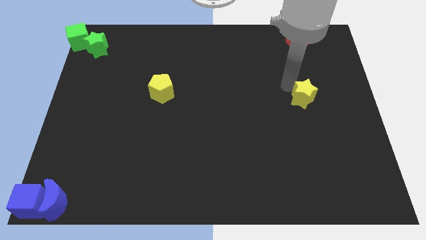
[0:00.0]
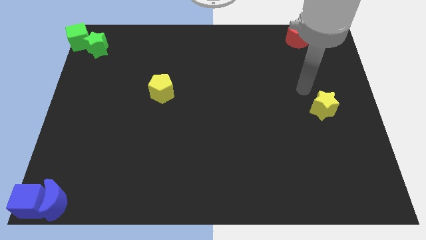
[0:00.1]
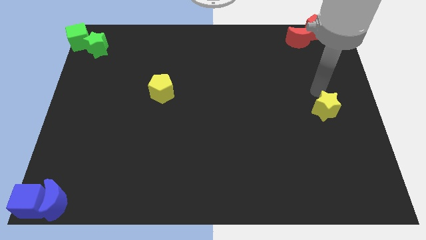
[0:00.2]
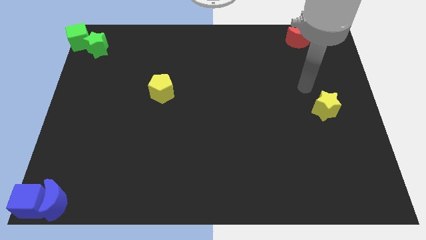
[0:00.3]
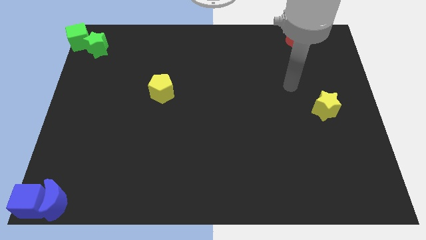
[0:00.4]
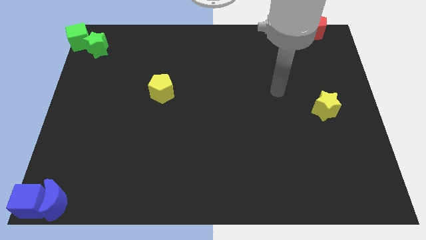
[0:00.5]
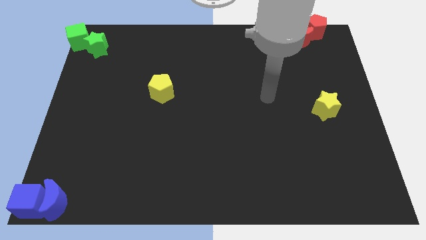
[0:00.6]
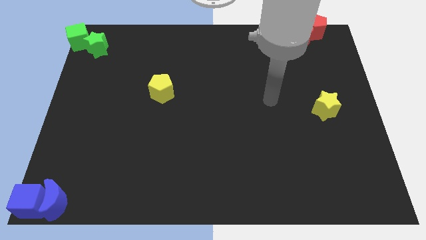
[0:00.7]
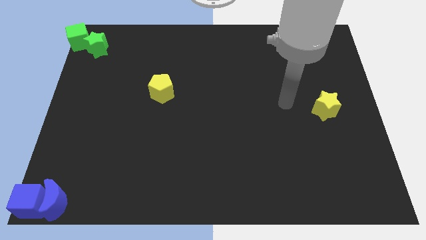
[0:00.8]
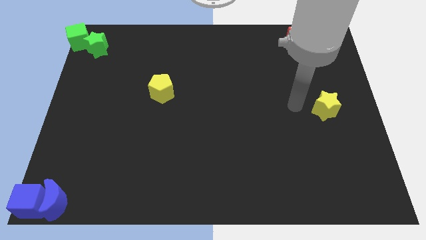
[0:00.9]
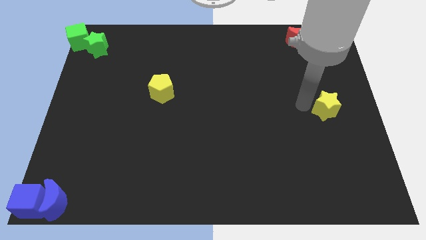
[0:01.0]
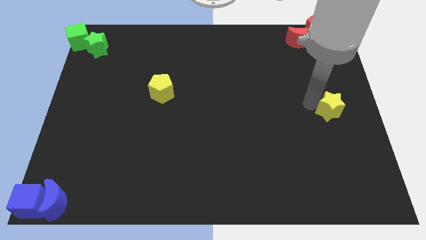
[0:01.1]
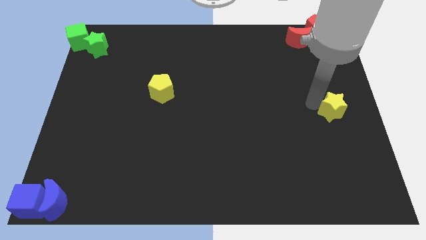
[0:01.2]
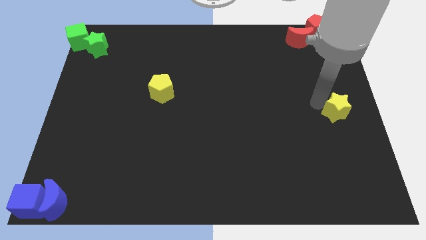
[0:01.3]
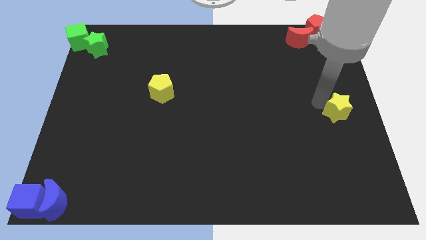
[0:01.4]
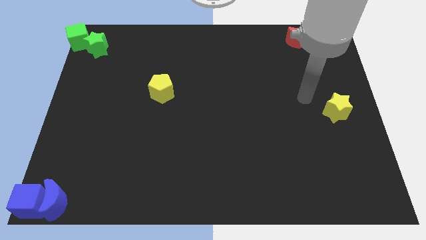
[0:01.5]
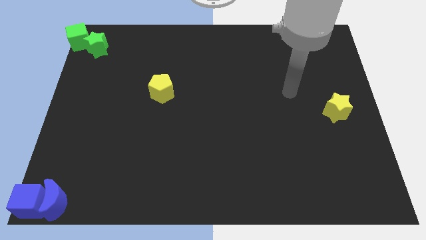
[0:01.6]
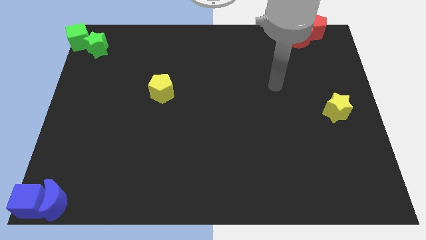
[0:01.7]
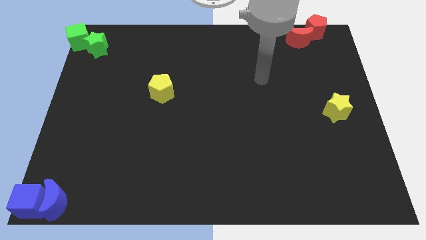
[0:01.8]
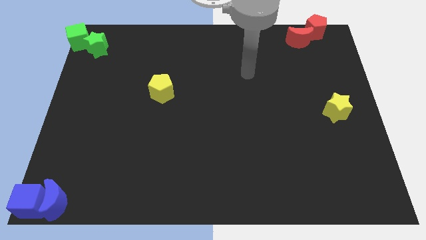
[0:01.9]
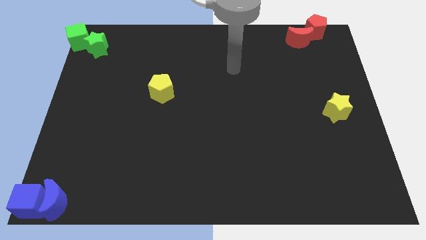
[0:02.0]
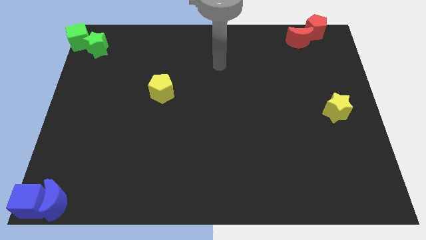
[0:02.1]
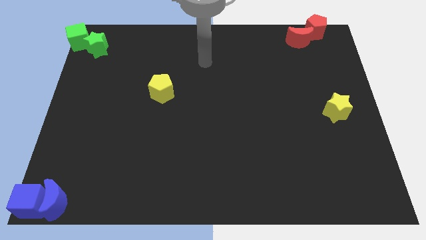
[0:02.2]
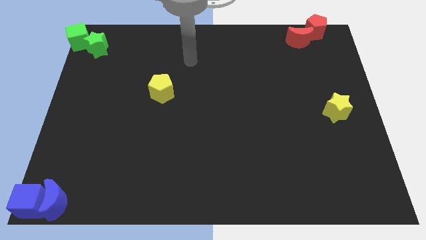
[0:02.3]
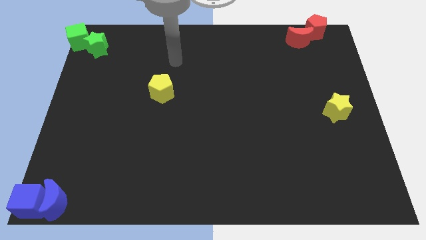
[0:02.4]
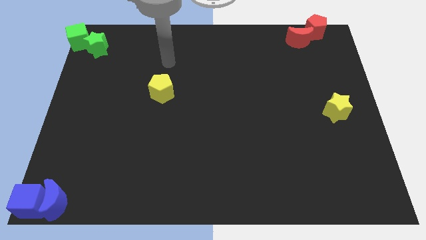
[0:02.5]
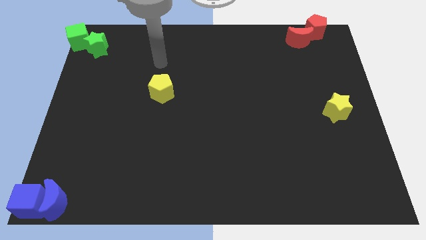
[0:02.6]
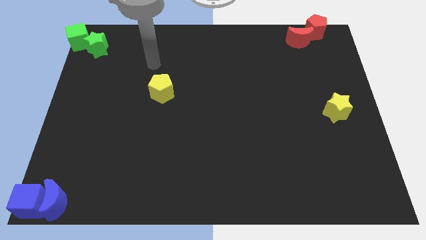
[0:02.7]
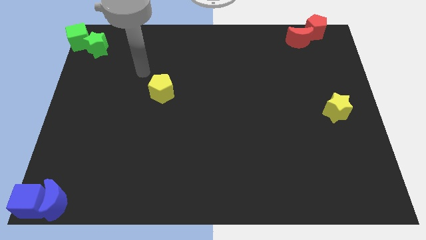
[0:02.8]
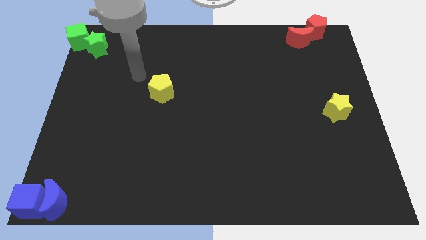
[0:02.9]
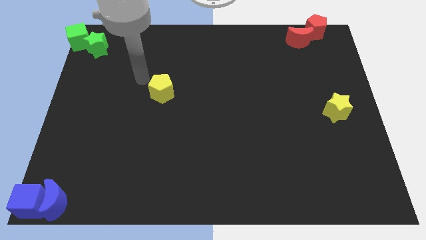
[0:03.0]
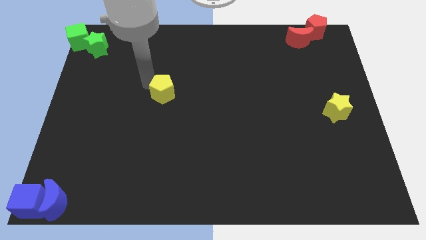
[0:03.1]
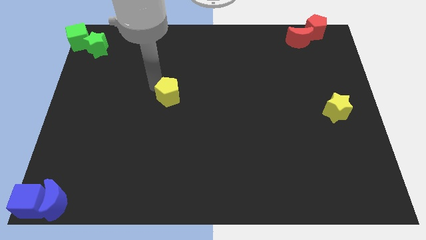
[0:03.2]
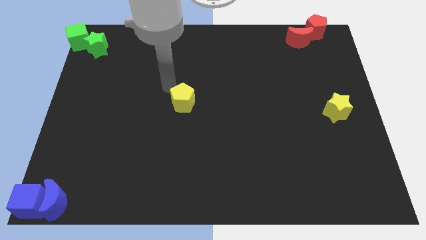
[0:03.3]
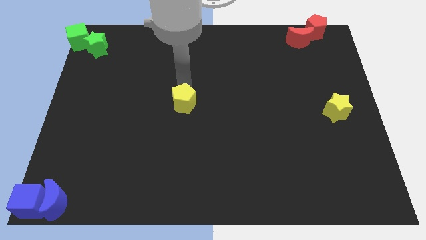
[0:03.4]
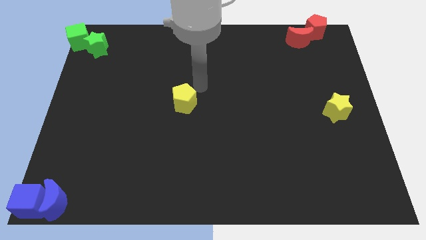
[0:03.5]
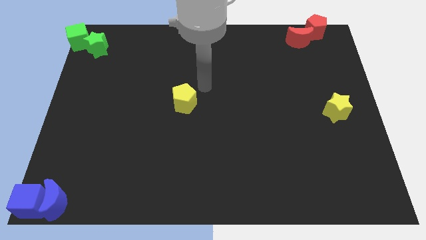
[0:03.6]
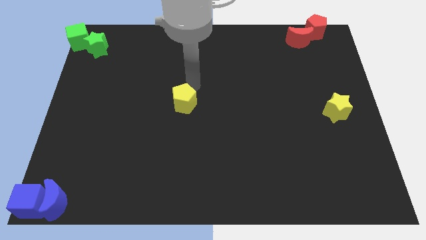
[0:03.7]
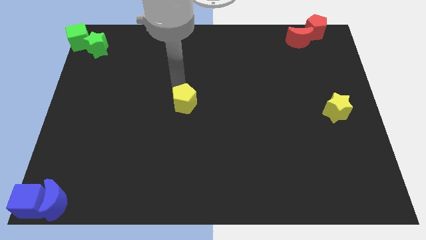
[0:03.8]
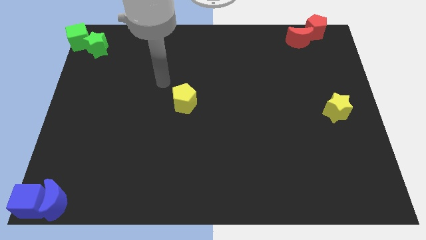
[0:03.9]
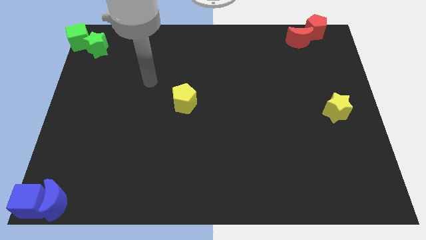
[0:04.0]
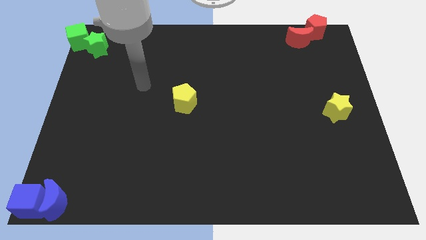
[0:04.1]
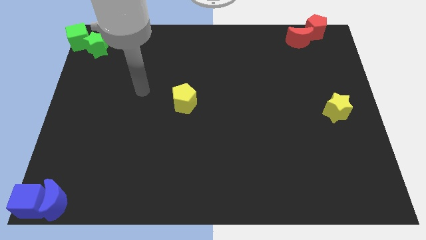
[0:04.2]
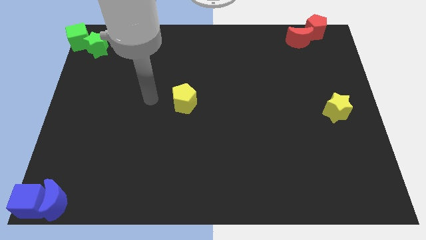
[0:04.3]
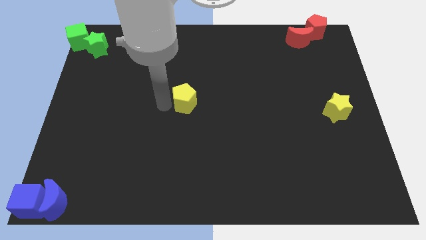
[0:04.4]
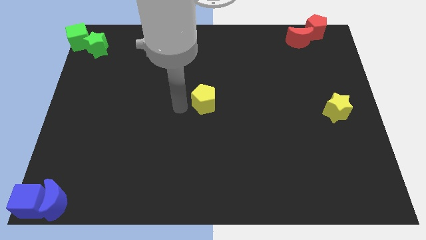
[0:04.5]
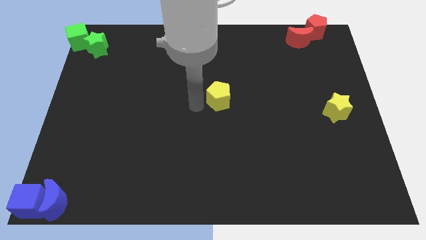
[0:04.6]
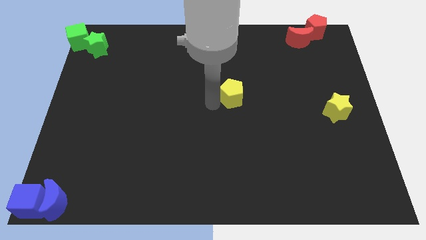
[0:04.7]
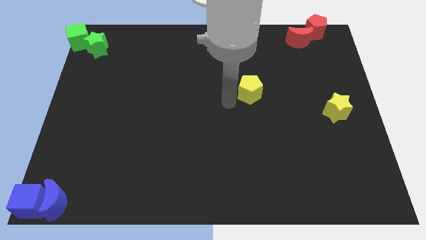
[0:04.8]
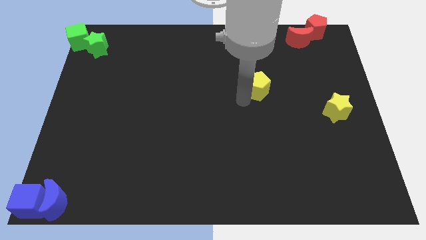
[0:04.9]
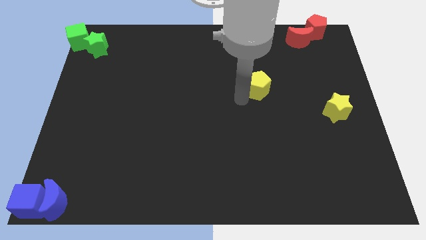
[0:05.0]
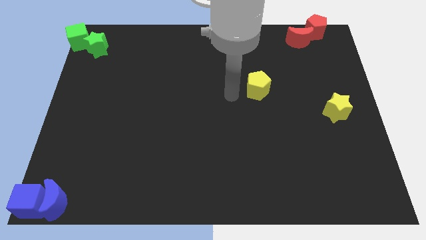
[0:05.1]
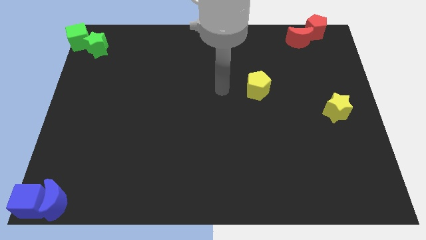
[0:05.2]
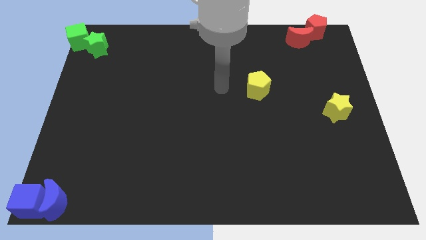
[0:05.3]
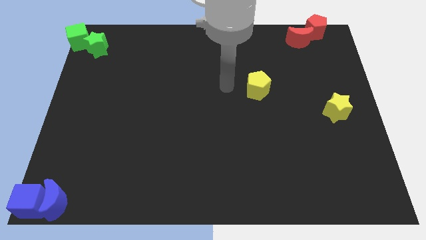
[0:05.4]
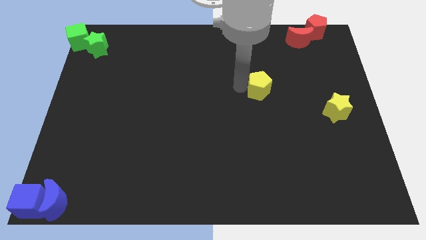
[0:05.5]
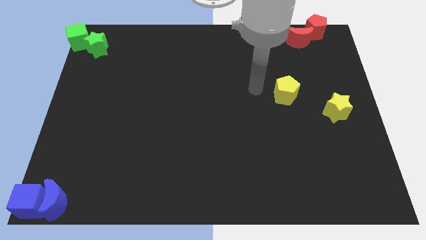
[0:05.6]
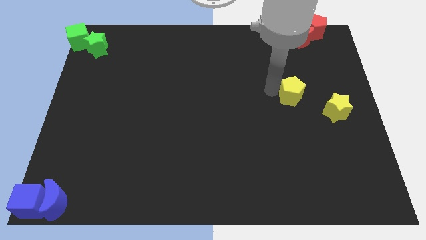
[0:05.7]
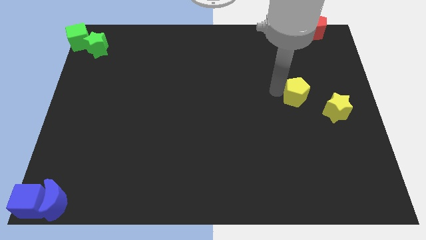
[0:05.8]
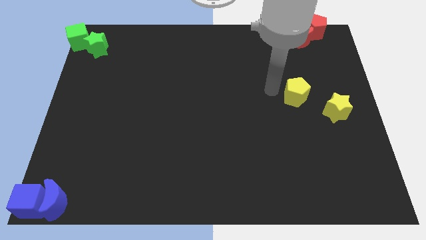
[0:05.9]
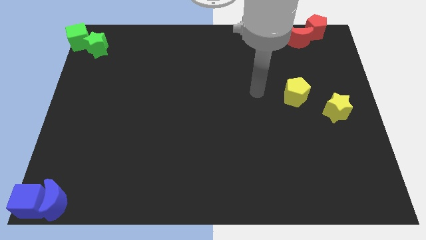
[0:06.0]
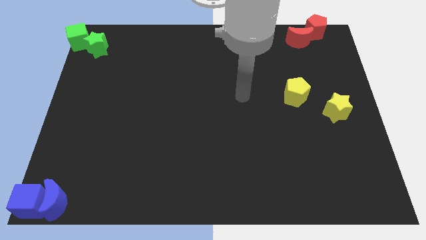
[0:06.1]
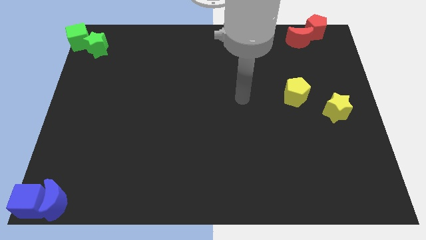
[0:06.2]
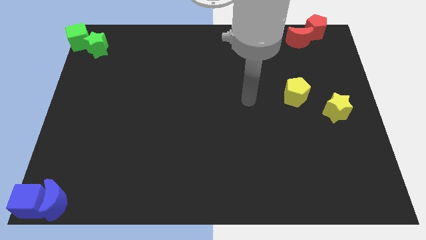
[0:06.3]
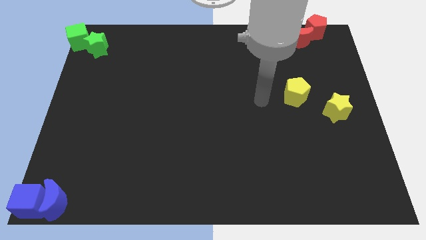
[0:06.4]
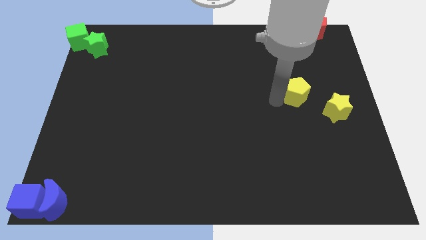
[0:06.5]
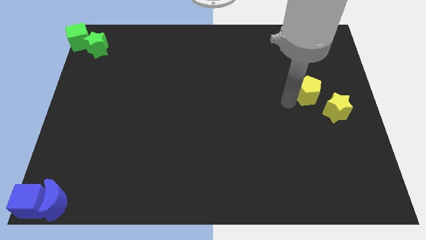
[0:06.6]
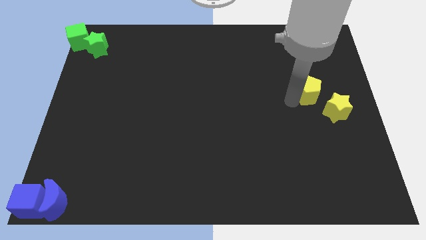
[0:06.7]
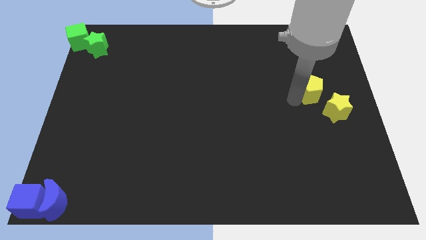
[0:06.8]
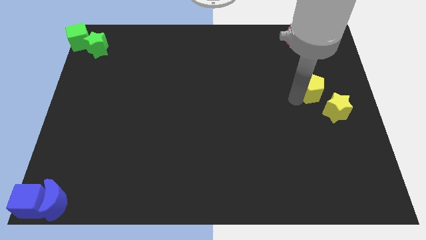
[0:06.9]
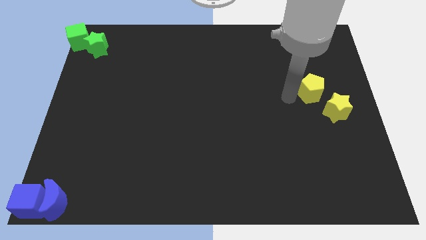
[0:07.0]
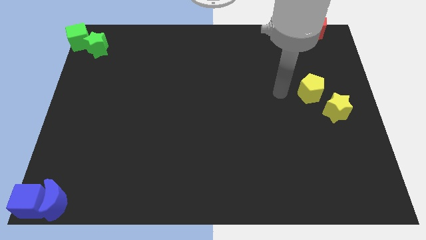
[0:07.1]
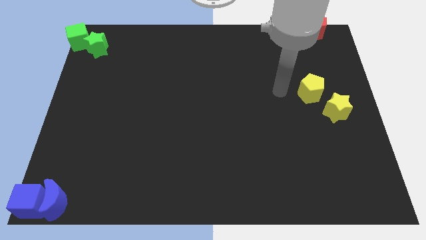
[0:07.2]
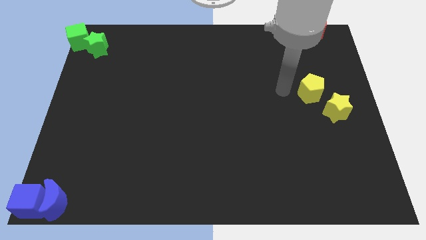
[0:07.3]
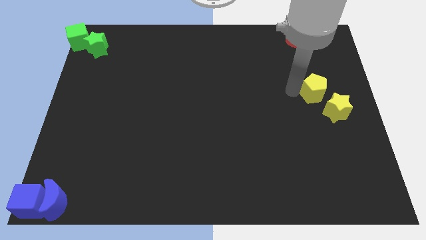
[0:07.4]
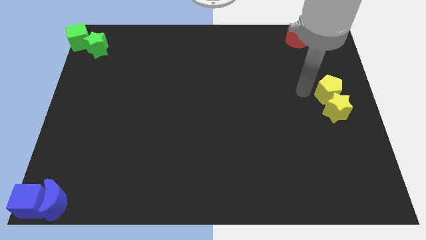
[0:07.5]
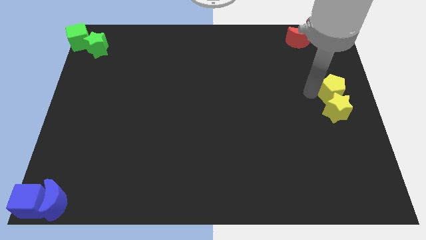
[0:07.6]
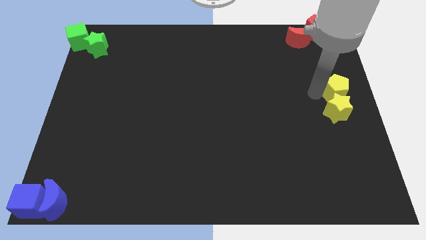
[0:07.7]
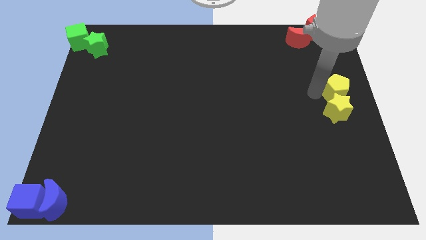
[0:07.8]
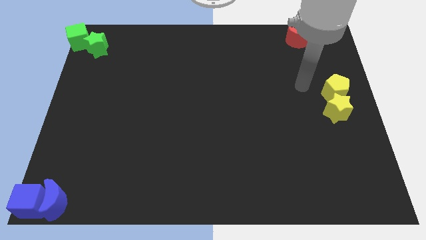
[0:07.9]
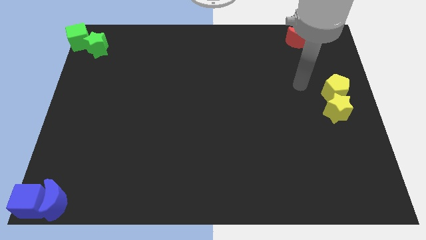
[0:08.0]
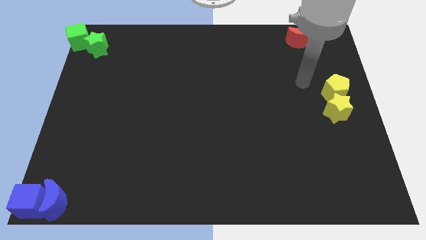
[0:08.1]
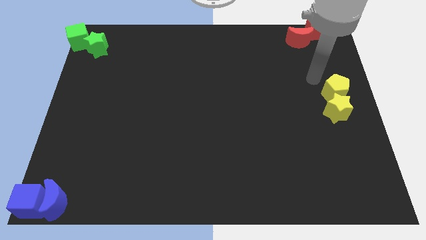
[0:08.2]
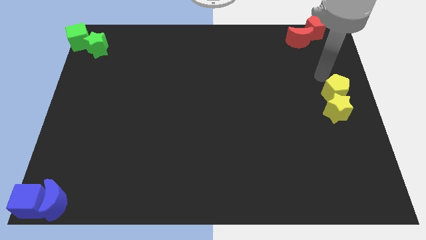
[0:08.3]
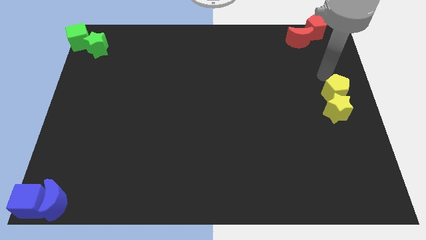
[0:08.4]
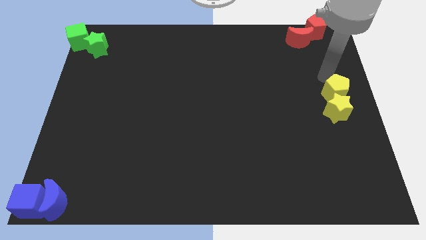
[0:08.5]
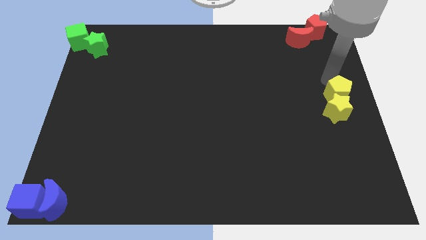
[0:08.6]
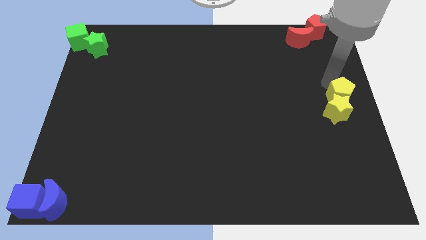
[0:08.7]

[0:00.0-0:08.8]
place the yellow pentagon above the yellow the star

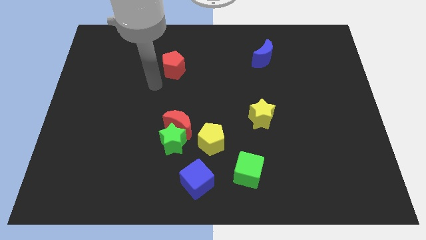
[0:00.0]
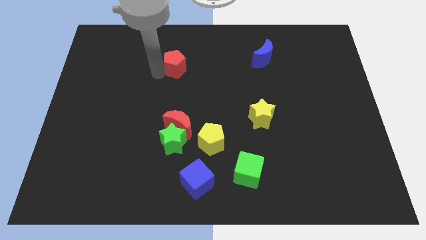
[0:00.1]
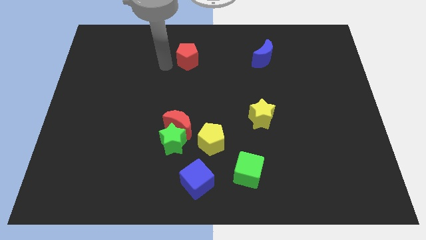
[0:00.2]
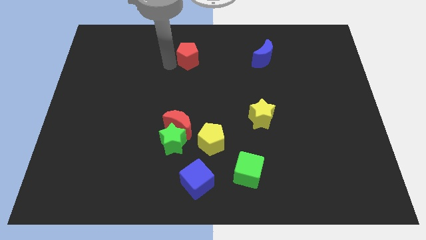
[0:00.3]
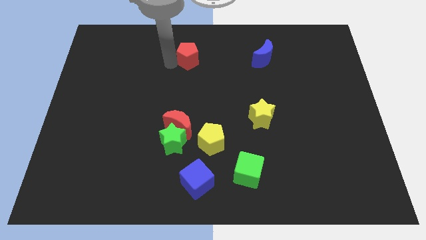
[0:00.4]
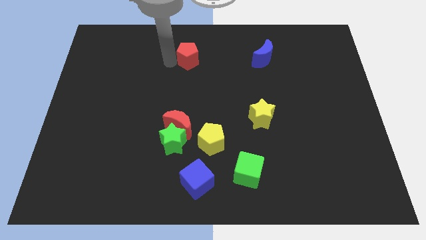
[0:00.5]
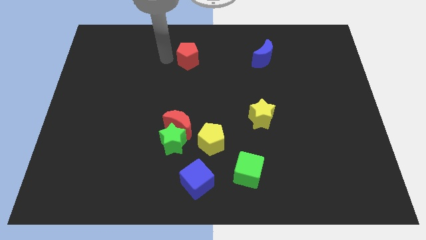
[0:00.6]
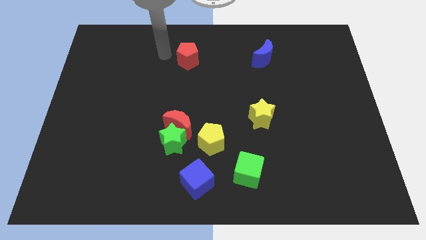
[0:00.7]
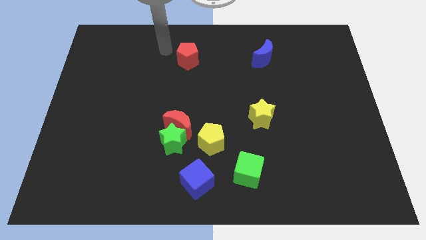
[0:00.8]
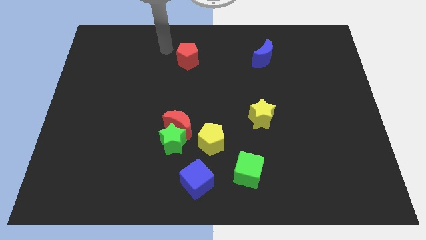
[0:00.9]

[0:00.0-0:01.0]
push the red pentagon slightly upward
